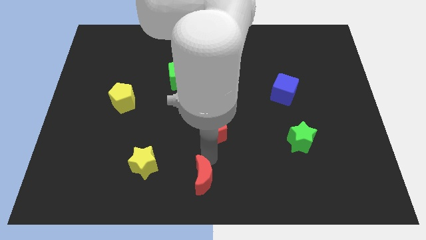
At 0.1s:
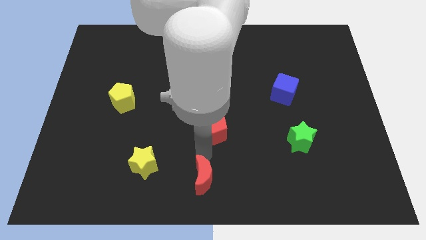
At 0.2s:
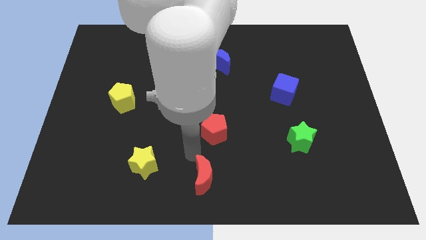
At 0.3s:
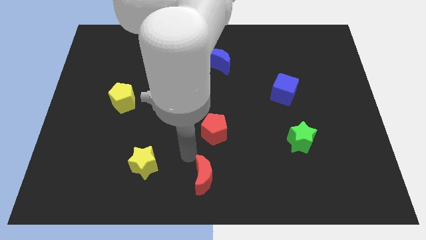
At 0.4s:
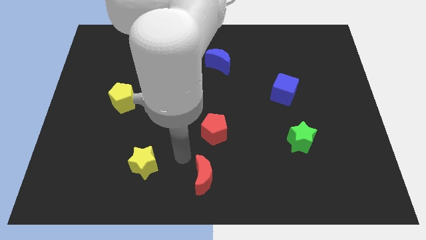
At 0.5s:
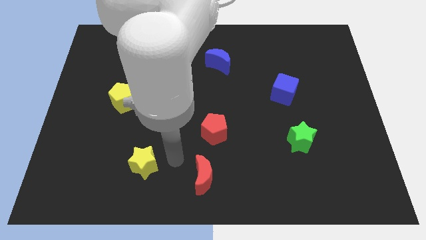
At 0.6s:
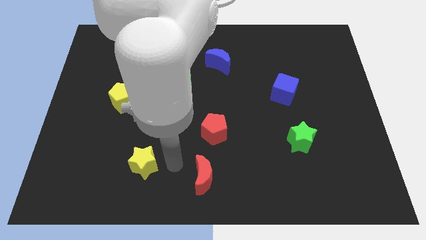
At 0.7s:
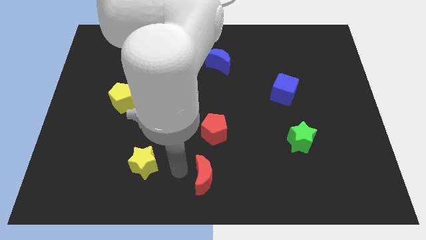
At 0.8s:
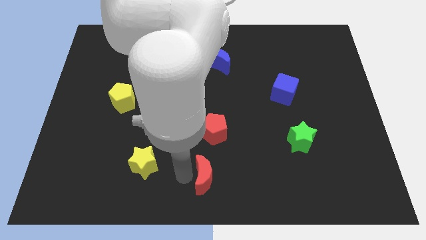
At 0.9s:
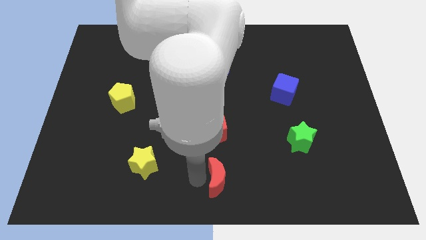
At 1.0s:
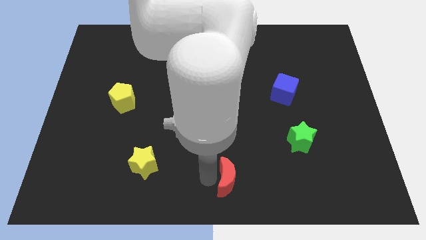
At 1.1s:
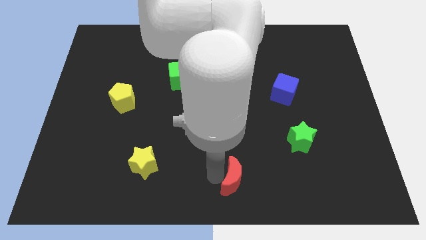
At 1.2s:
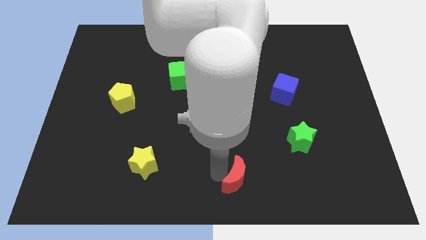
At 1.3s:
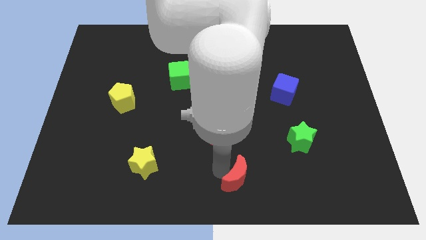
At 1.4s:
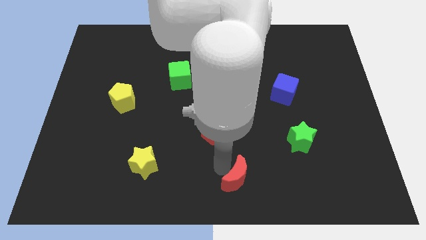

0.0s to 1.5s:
push the red crescent towards the right

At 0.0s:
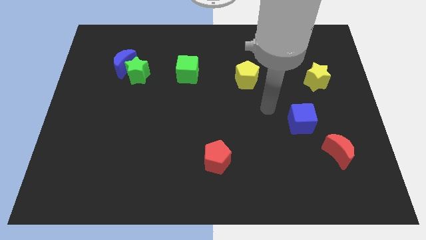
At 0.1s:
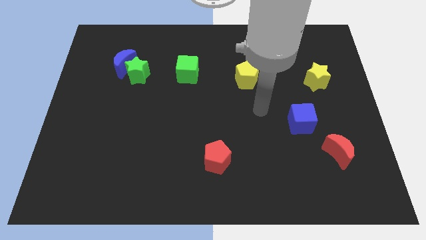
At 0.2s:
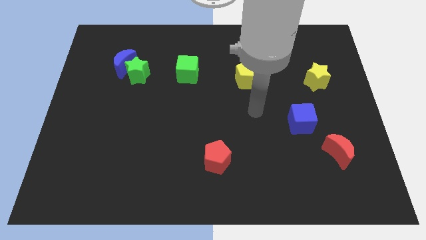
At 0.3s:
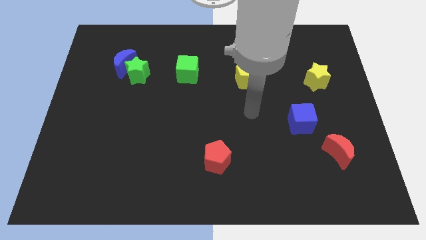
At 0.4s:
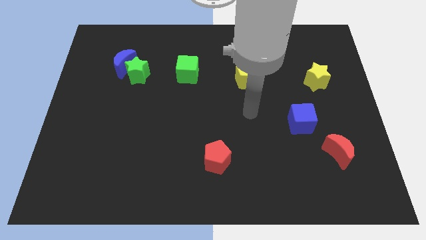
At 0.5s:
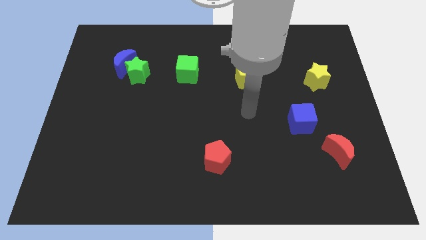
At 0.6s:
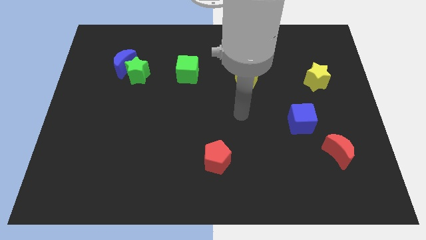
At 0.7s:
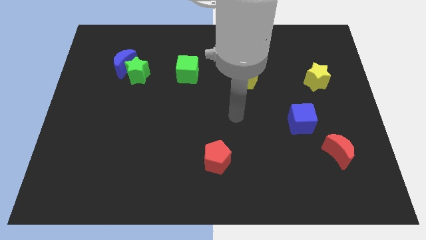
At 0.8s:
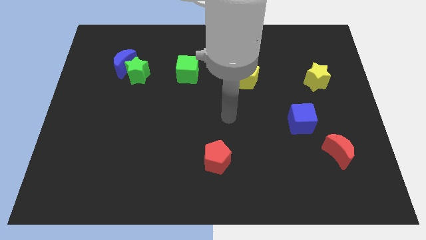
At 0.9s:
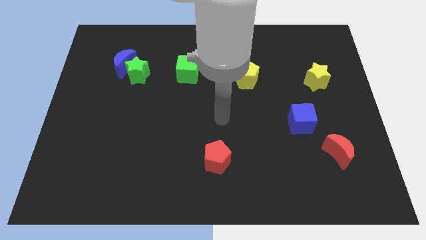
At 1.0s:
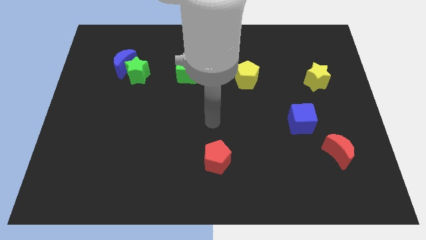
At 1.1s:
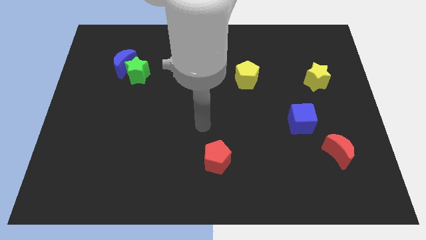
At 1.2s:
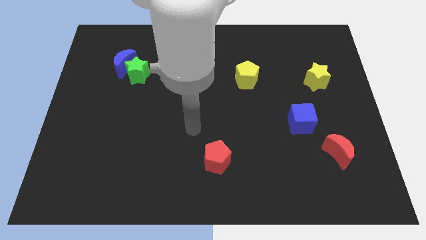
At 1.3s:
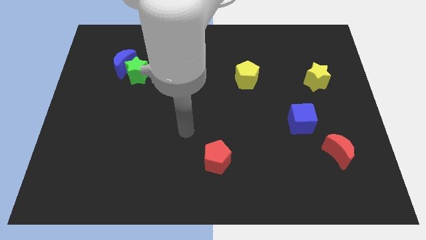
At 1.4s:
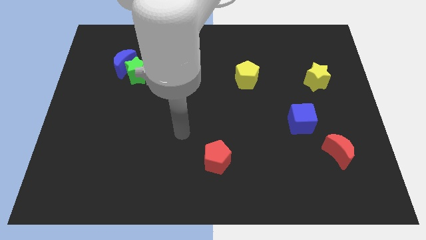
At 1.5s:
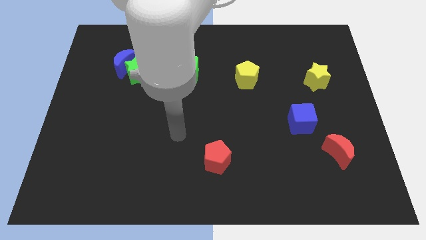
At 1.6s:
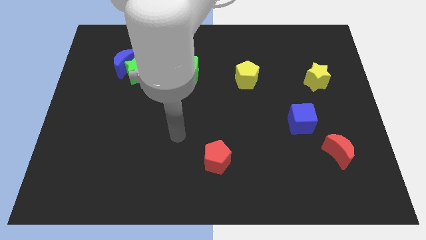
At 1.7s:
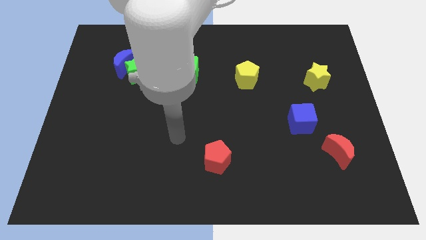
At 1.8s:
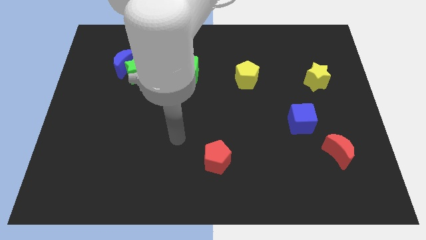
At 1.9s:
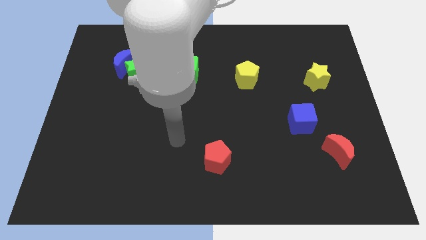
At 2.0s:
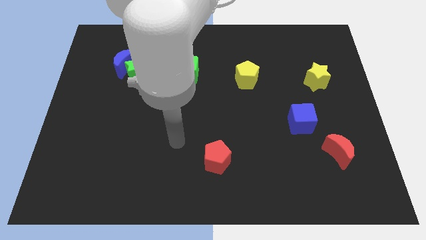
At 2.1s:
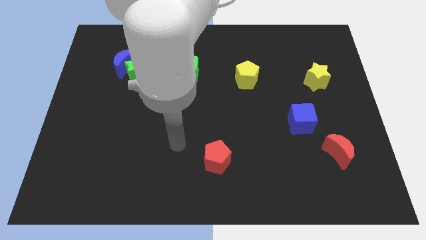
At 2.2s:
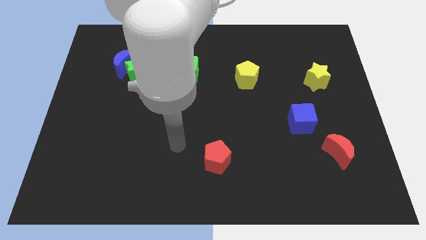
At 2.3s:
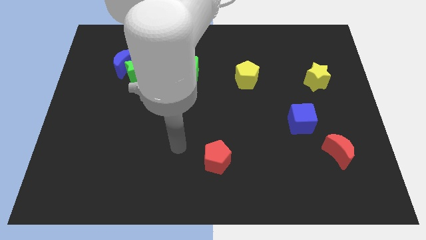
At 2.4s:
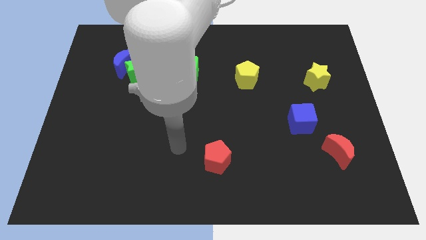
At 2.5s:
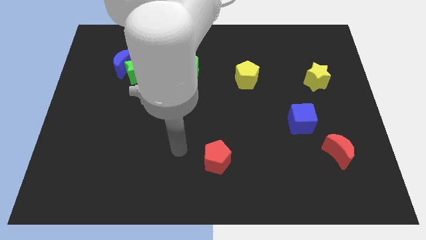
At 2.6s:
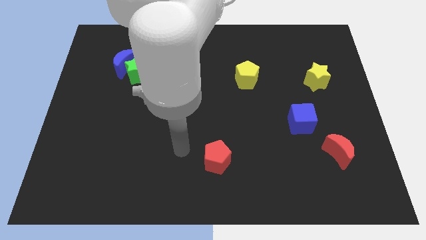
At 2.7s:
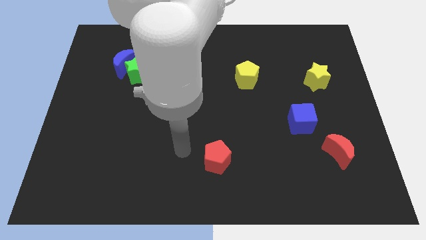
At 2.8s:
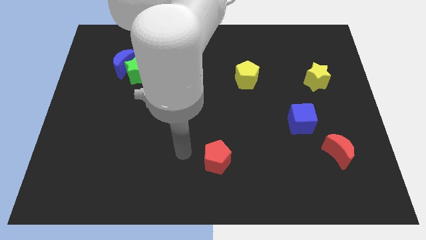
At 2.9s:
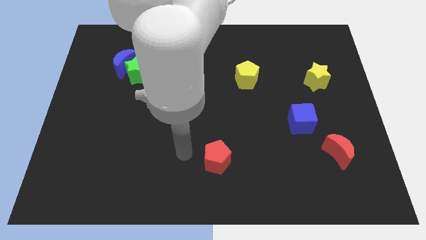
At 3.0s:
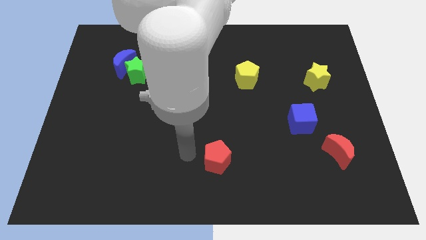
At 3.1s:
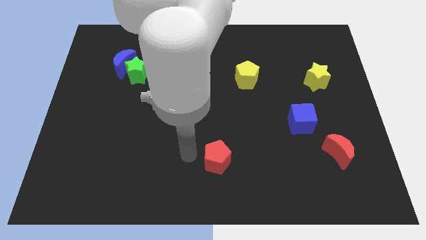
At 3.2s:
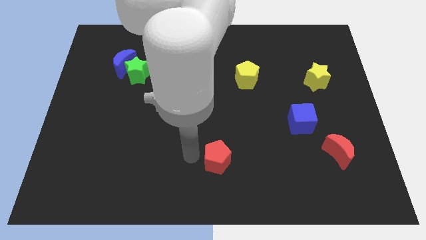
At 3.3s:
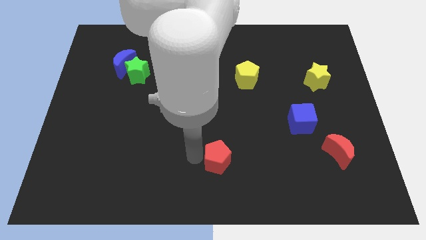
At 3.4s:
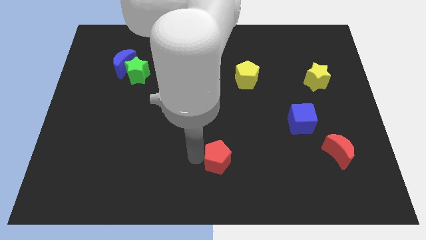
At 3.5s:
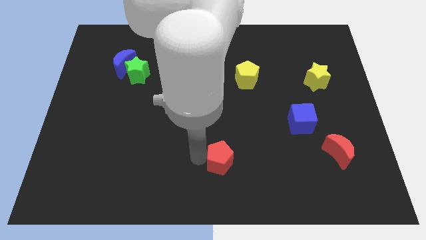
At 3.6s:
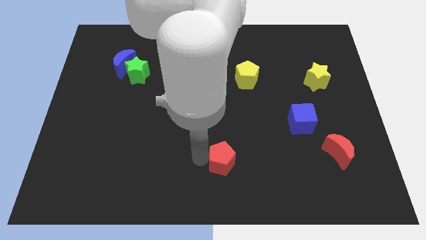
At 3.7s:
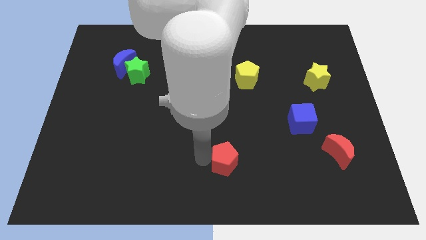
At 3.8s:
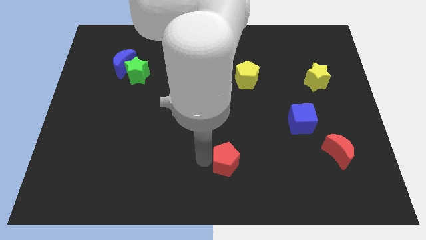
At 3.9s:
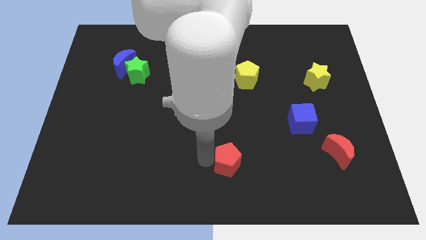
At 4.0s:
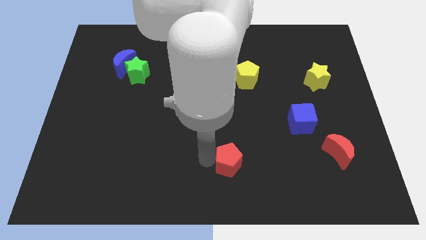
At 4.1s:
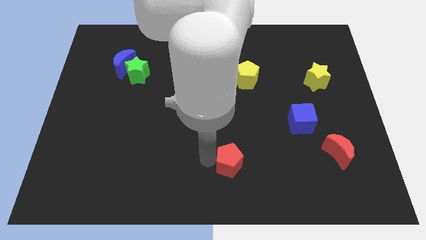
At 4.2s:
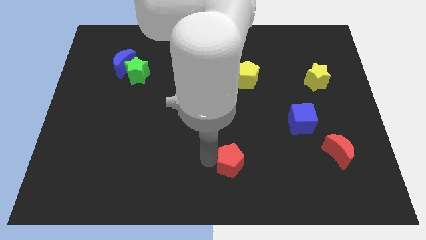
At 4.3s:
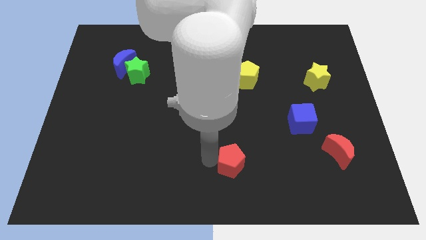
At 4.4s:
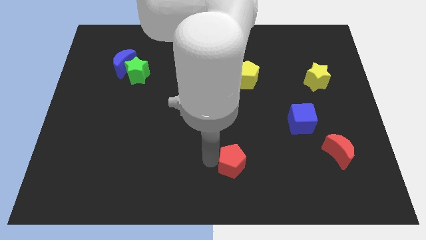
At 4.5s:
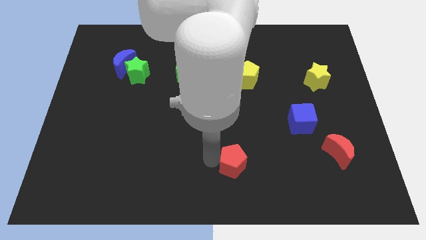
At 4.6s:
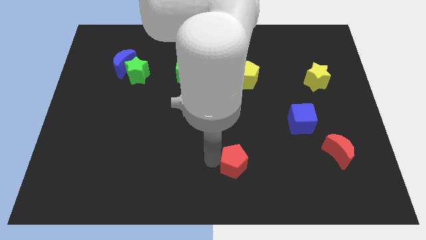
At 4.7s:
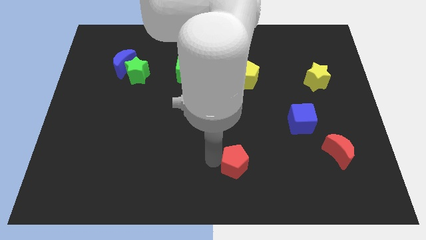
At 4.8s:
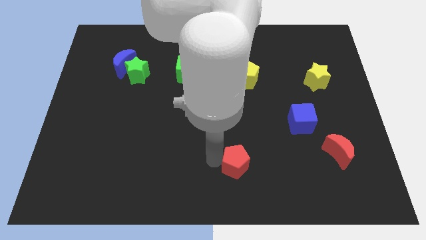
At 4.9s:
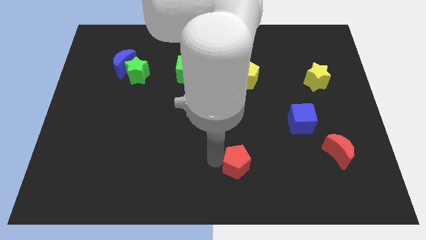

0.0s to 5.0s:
move the red pentagon vertically below the yellow pentagon

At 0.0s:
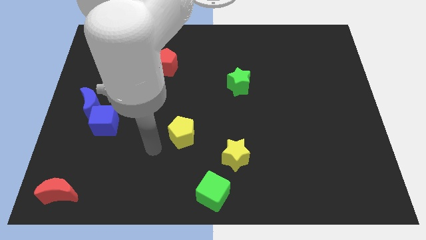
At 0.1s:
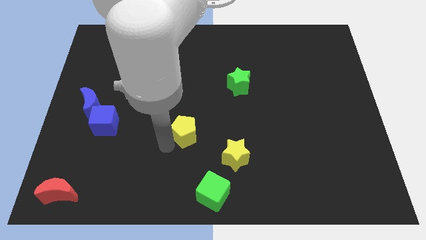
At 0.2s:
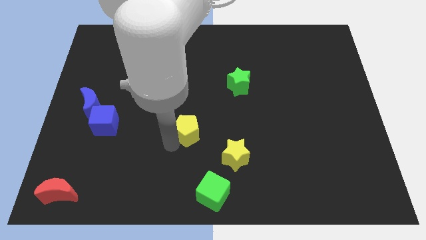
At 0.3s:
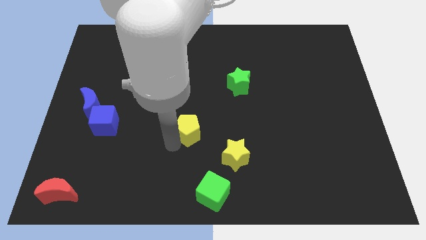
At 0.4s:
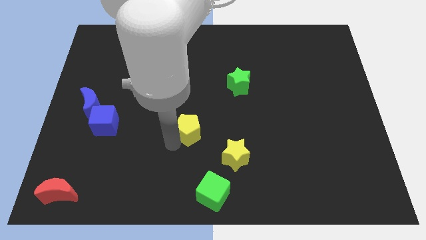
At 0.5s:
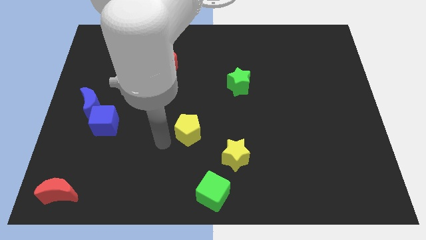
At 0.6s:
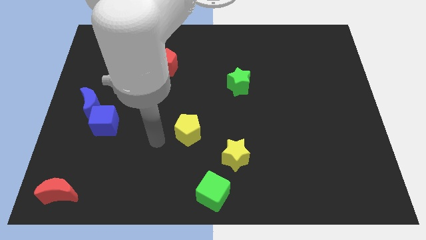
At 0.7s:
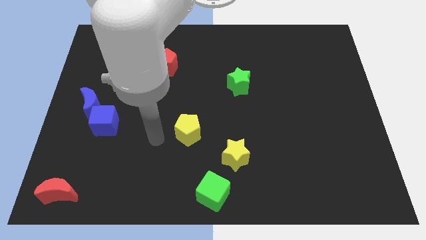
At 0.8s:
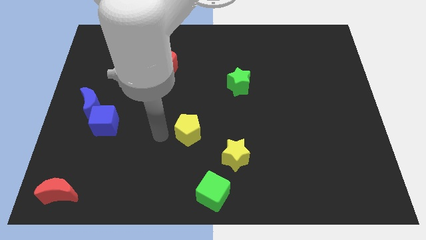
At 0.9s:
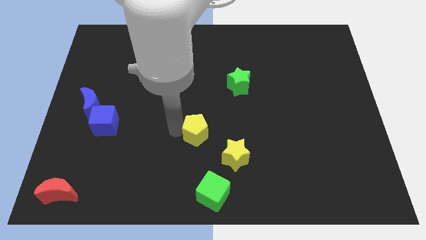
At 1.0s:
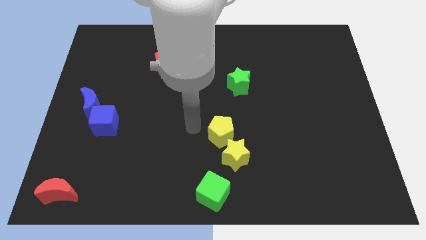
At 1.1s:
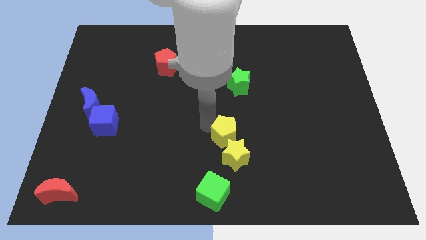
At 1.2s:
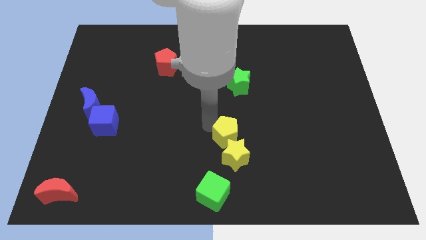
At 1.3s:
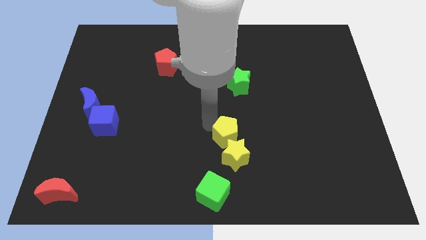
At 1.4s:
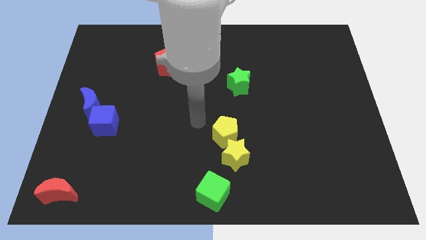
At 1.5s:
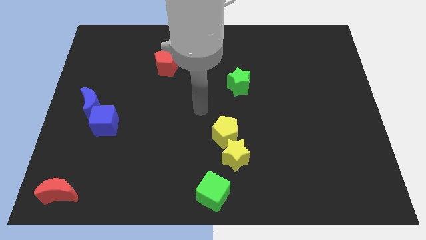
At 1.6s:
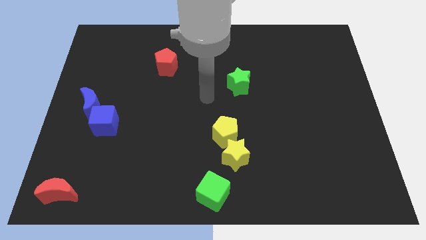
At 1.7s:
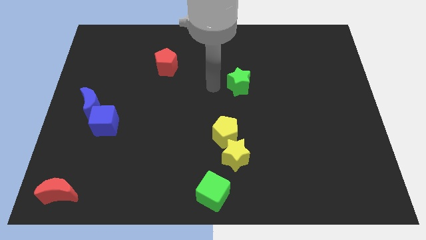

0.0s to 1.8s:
move yellow pentagon diagonally above yellow star

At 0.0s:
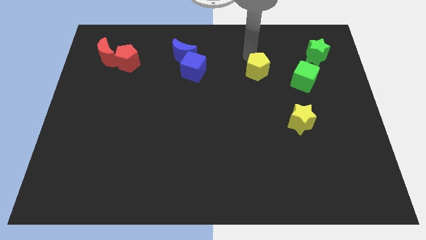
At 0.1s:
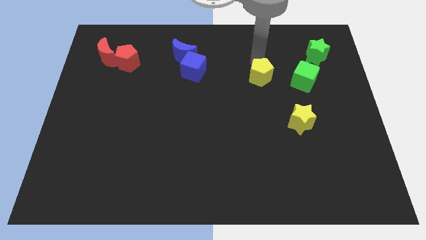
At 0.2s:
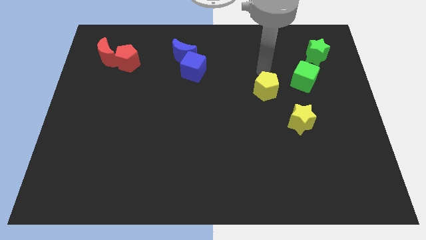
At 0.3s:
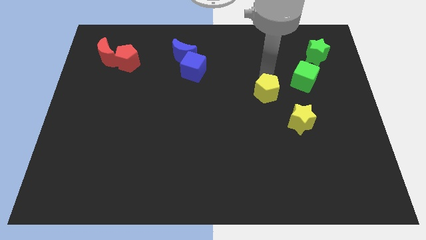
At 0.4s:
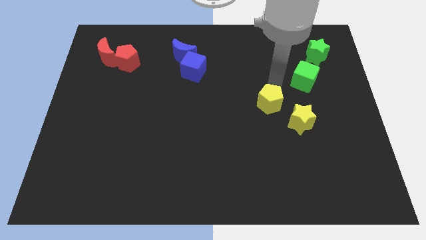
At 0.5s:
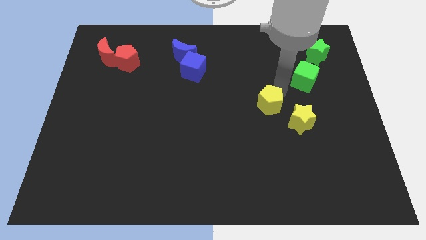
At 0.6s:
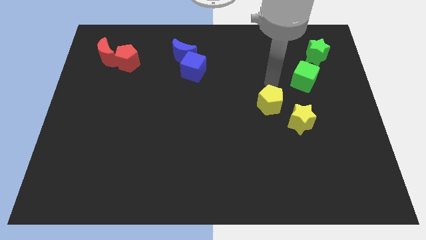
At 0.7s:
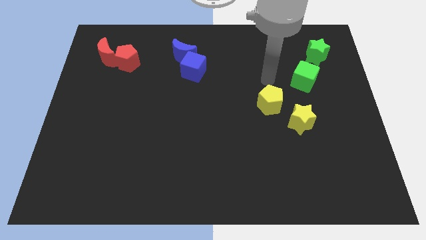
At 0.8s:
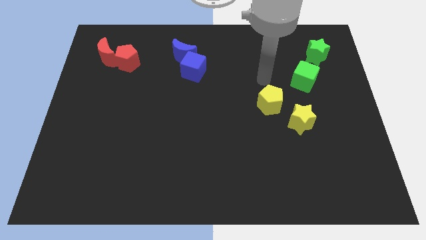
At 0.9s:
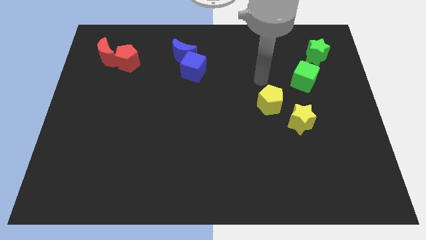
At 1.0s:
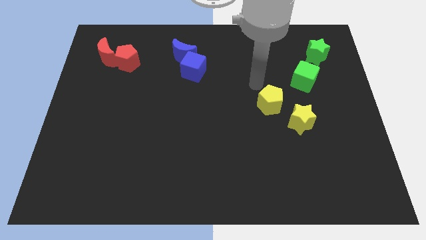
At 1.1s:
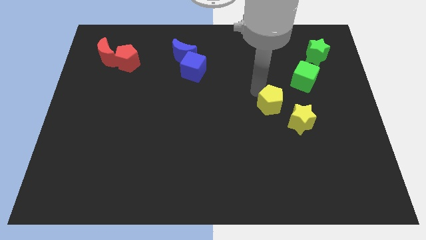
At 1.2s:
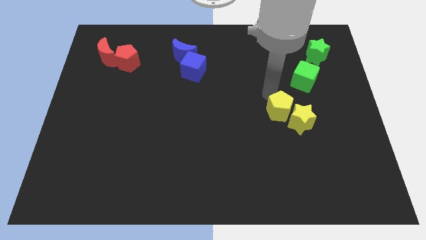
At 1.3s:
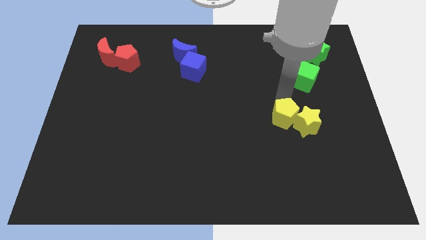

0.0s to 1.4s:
move the yellow pentagon closer to the yellow star
